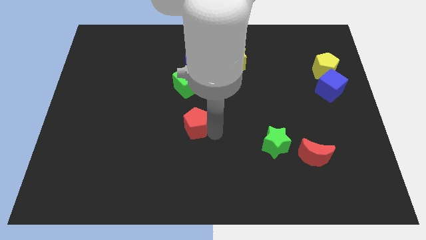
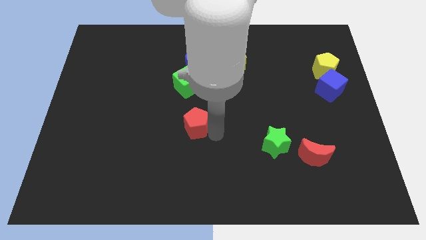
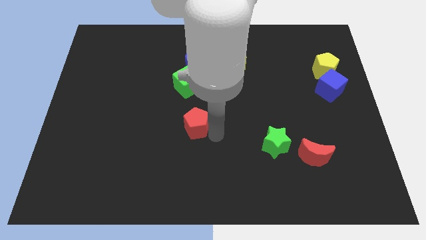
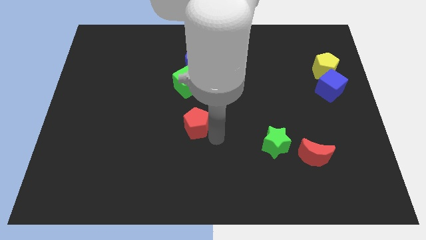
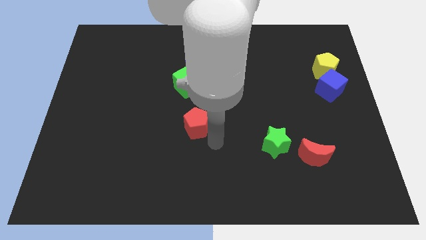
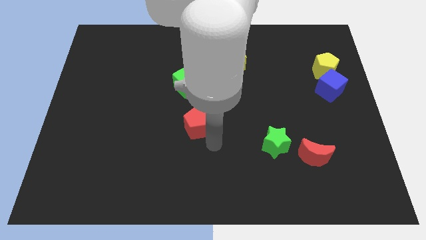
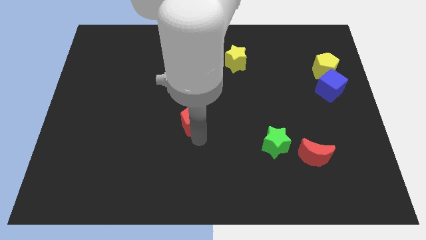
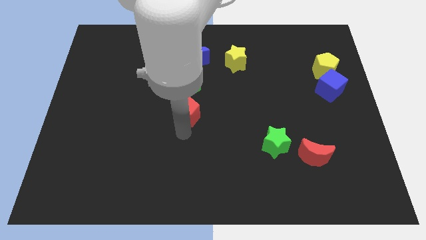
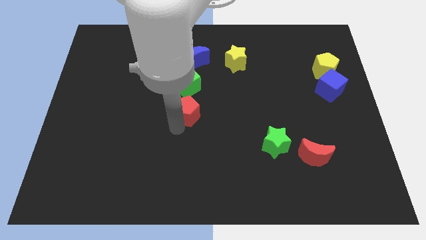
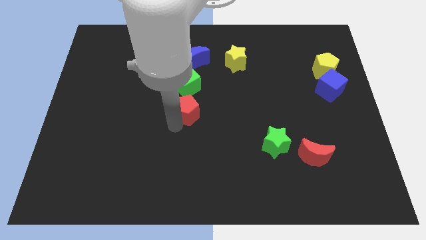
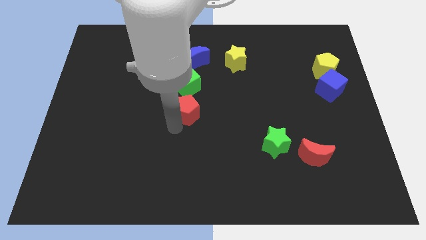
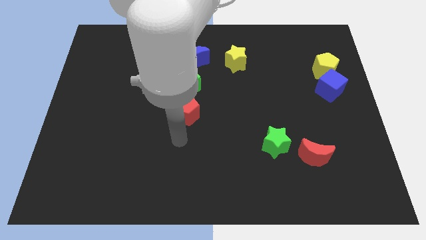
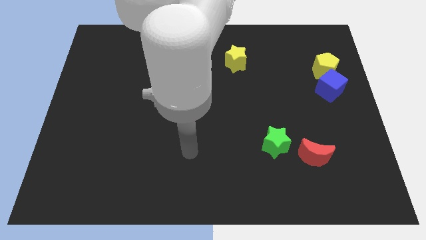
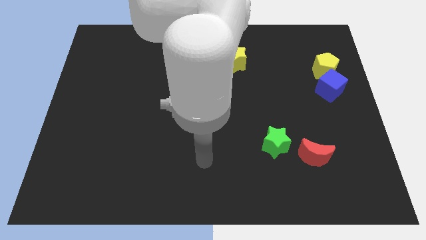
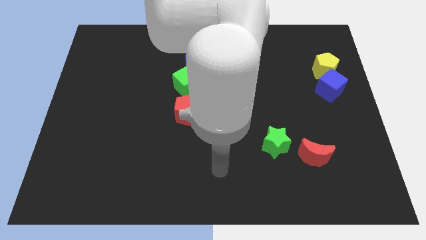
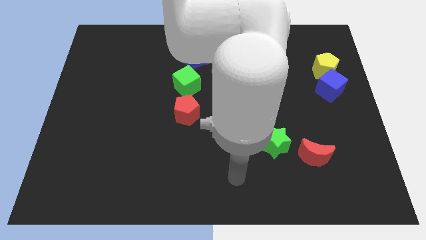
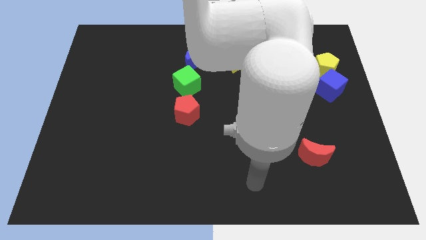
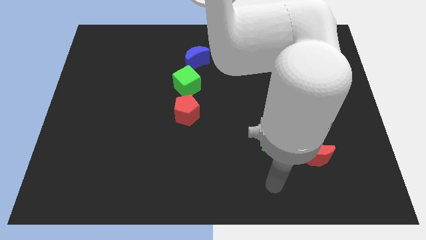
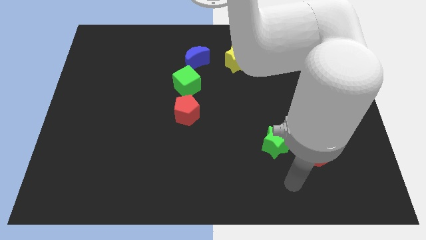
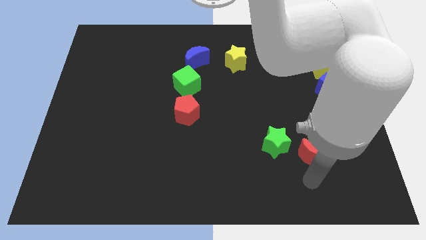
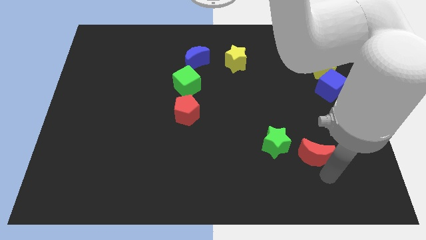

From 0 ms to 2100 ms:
place the red pentagon below the green cube

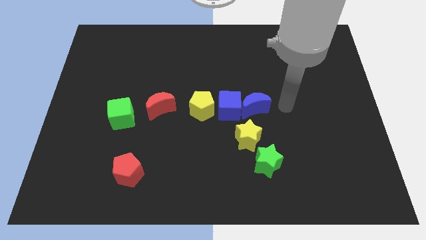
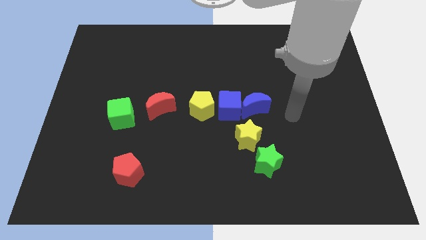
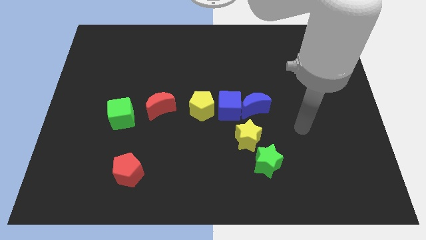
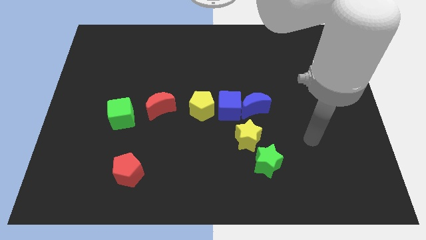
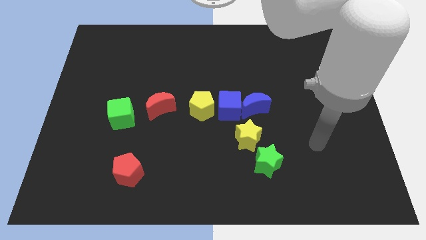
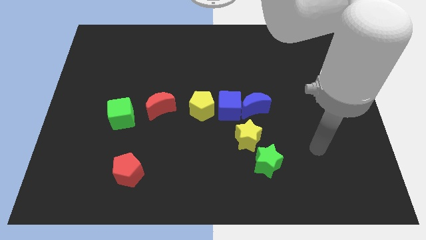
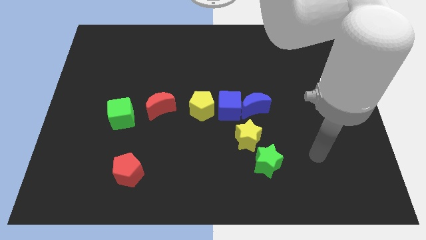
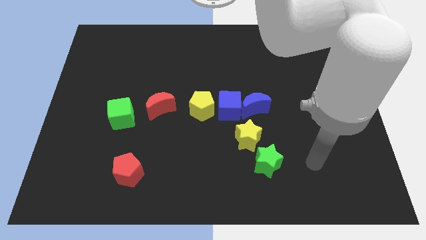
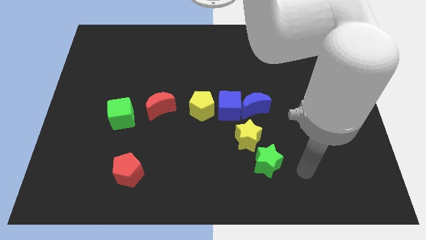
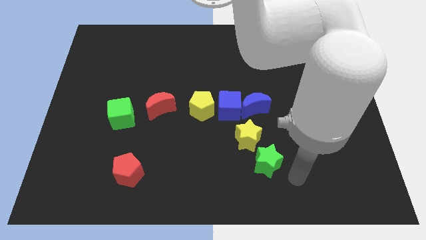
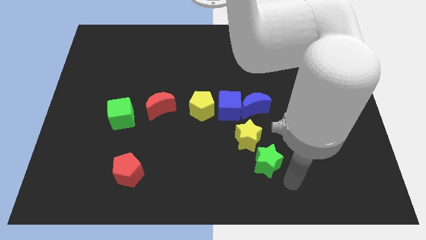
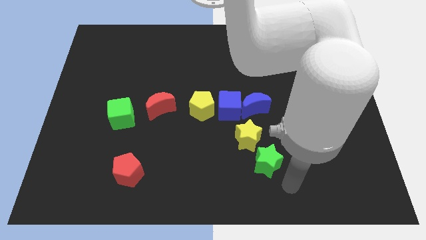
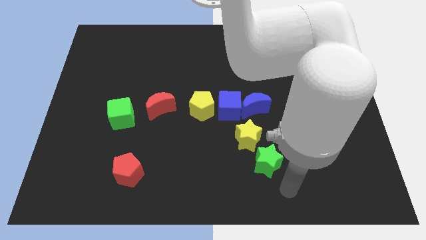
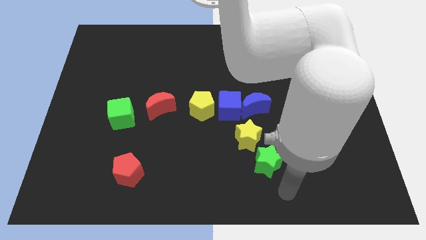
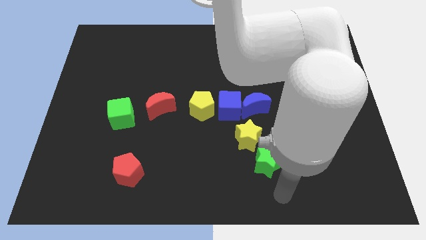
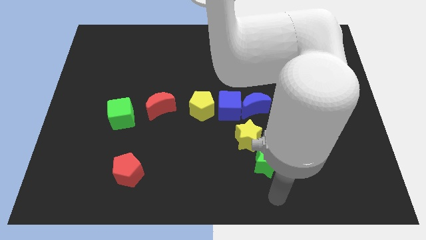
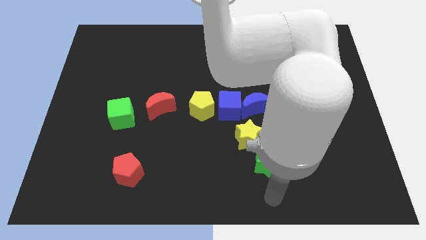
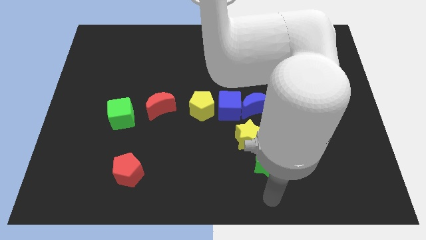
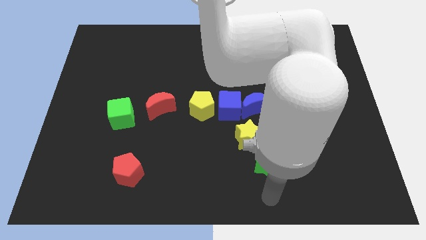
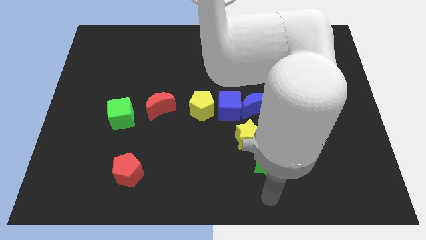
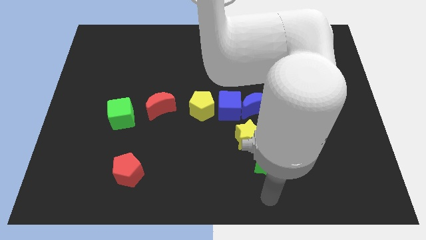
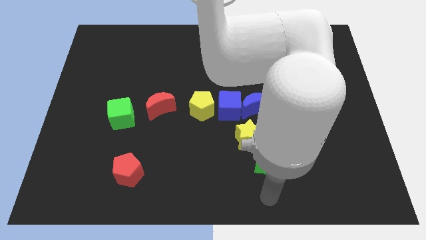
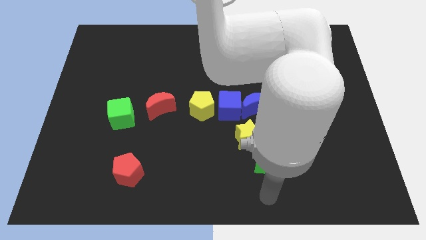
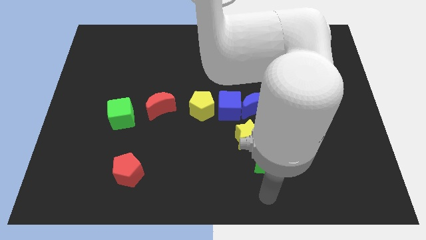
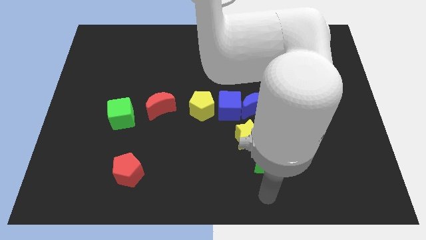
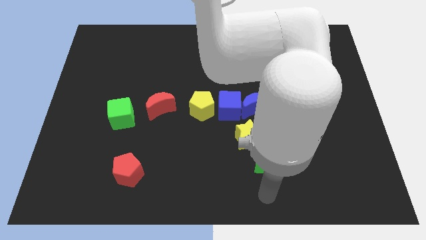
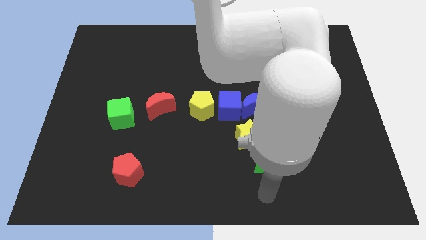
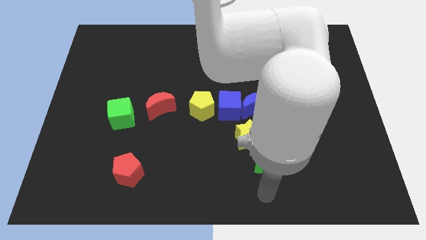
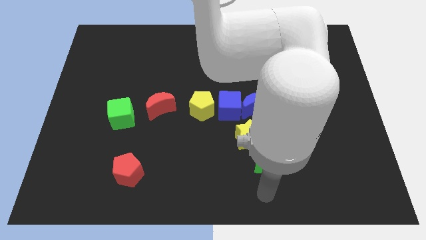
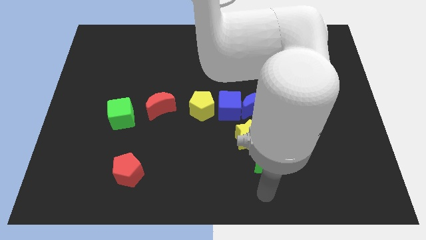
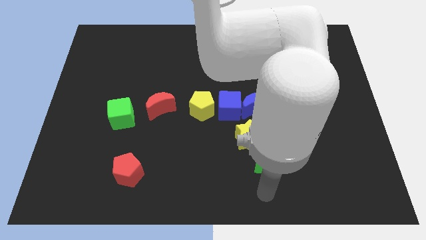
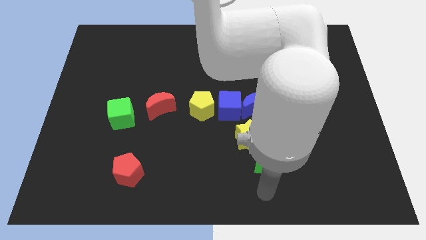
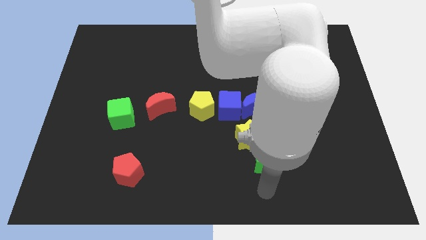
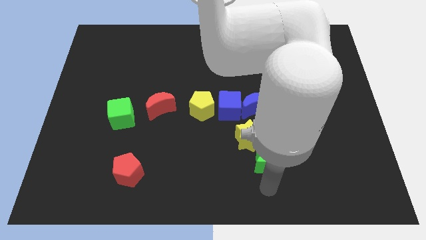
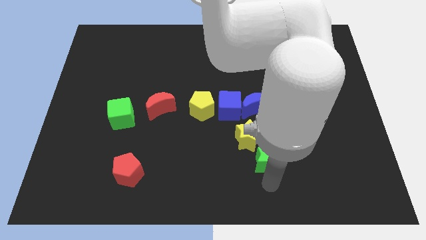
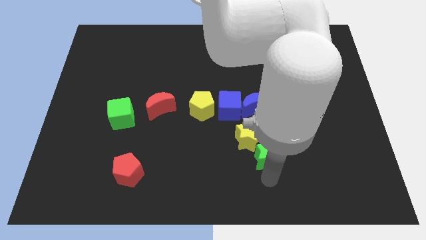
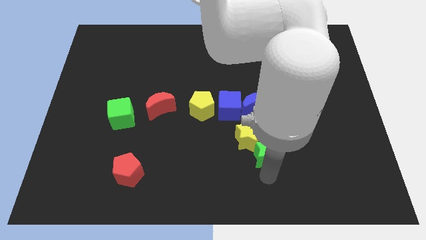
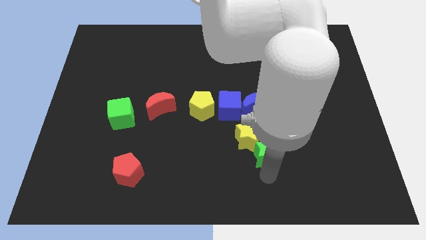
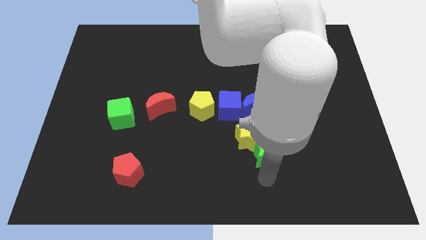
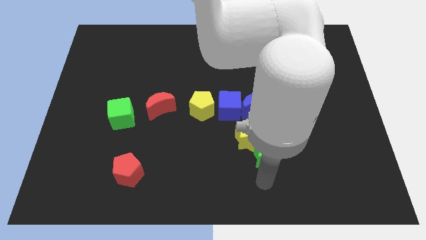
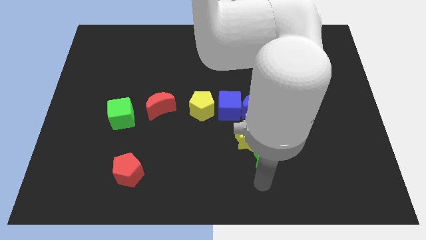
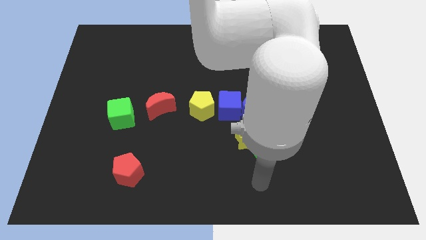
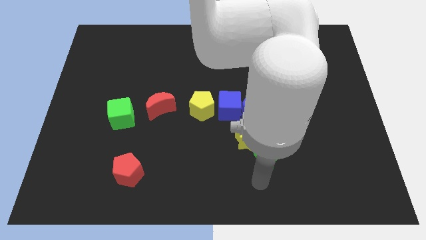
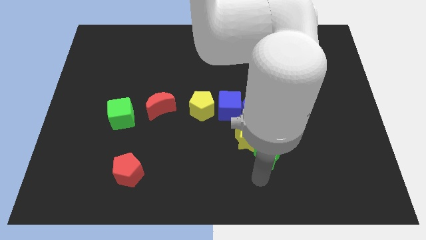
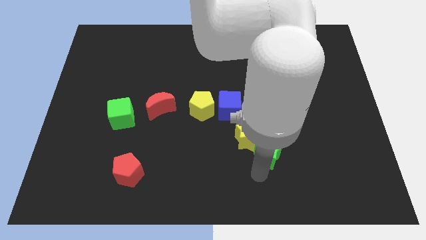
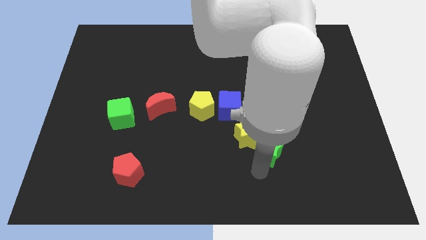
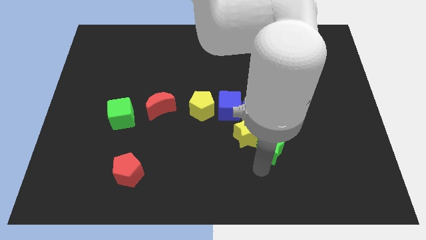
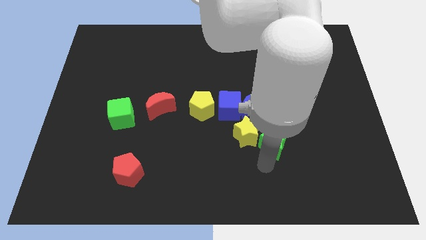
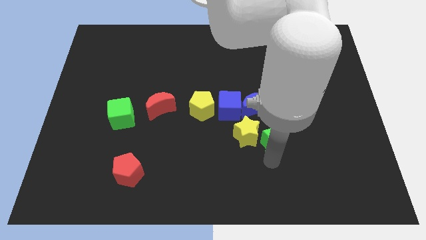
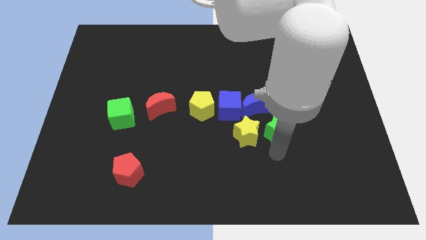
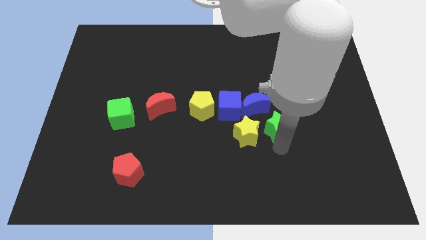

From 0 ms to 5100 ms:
push the green star to the right of the yellow star

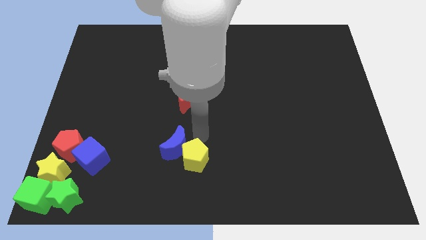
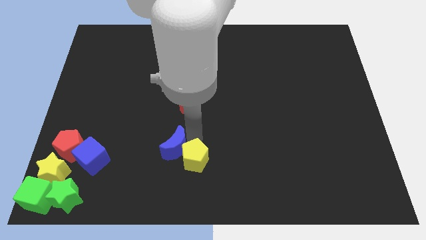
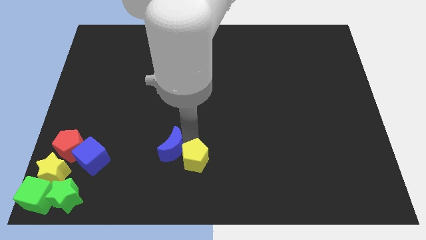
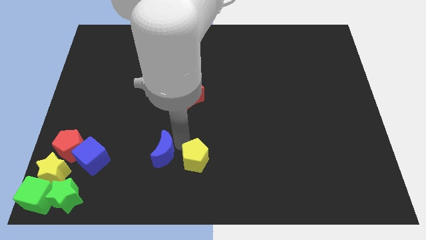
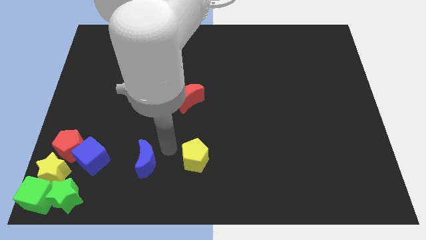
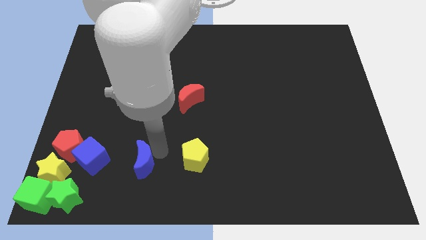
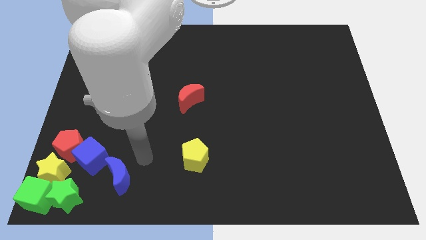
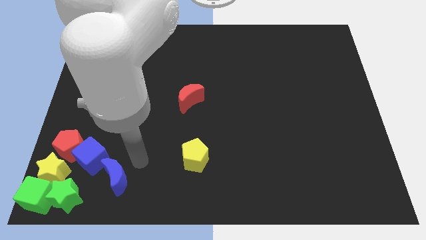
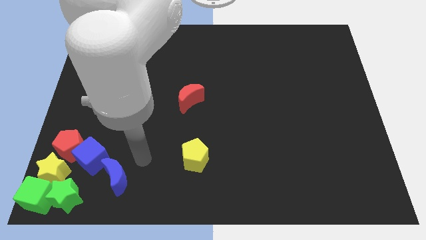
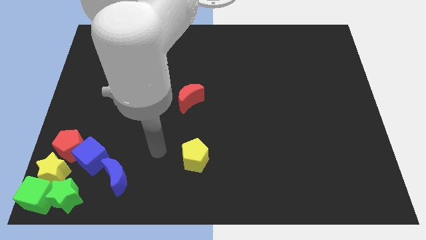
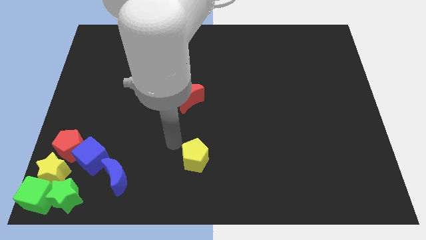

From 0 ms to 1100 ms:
move blue moon into blue cube

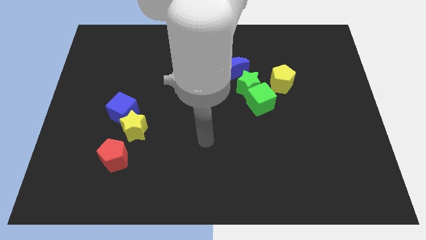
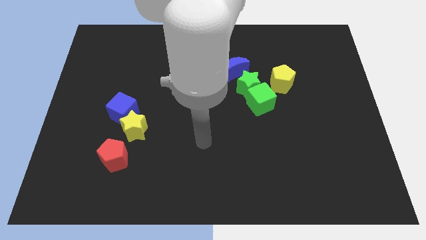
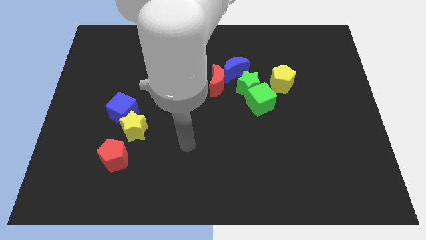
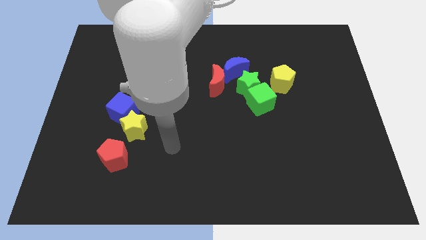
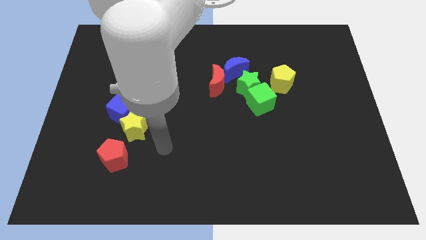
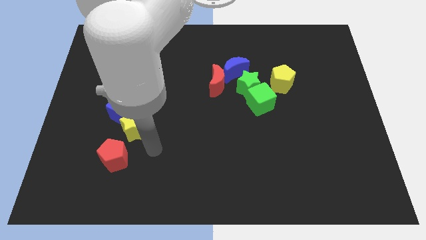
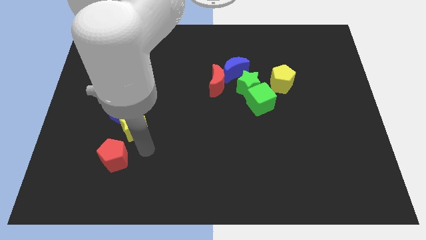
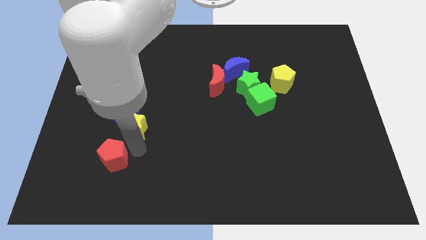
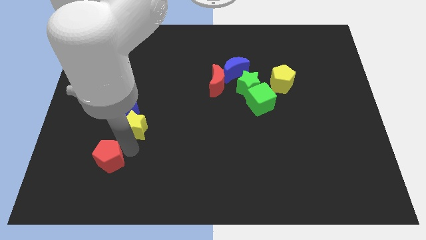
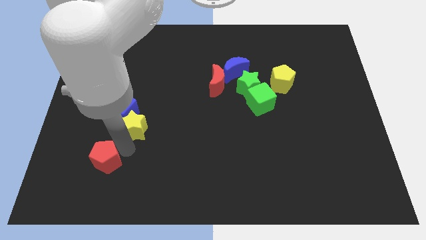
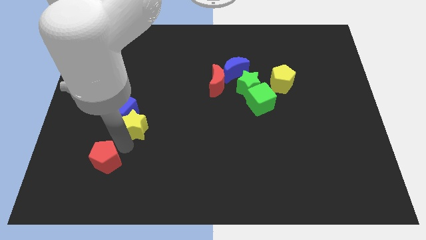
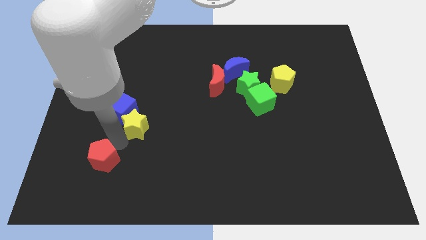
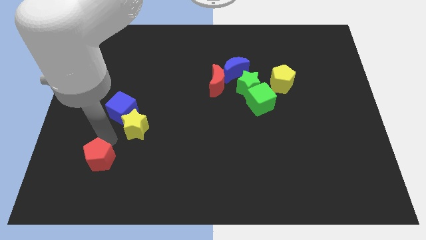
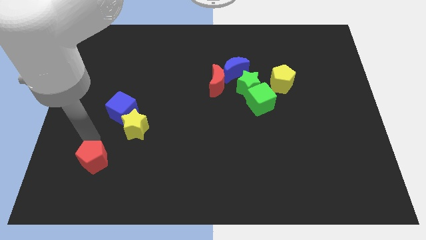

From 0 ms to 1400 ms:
push the red pentagon slightly to the left
